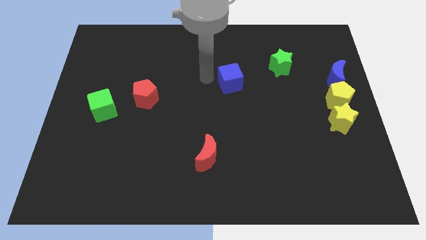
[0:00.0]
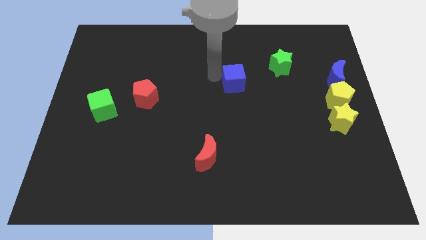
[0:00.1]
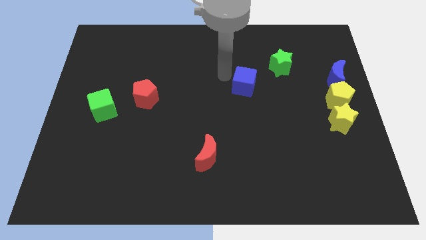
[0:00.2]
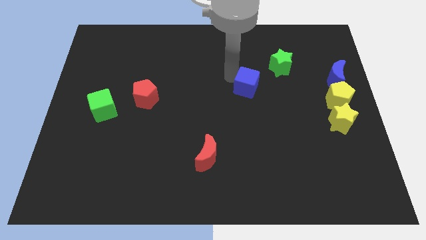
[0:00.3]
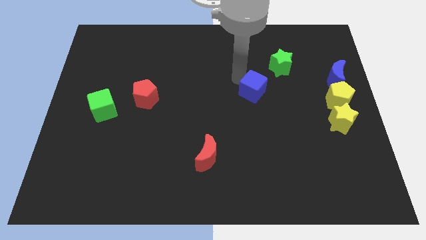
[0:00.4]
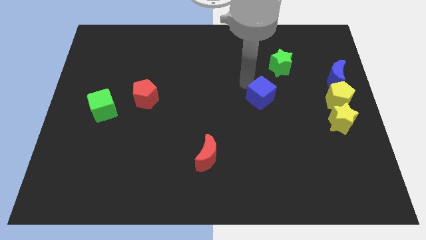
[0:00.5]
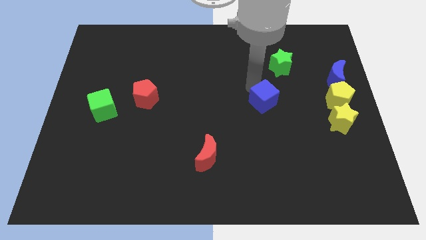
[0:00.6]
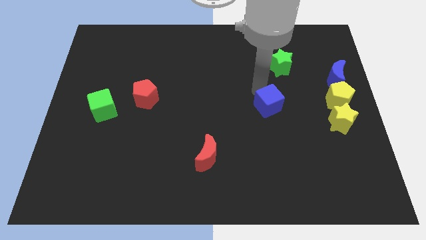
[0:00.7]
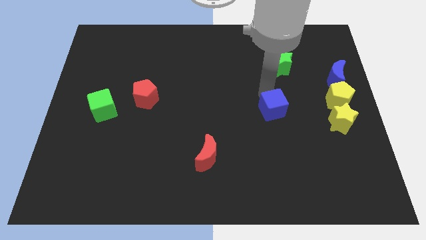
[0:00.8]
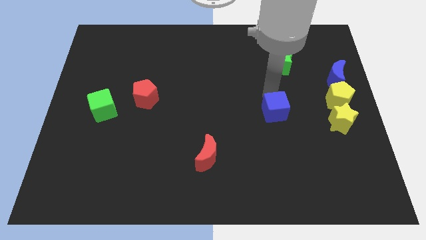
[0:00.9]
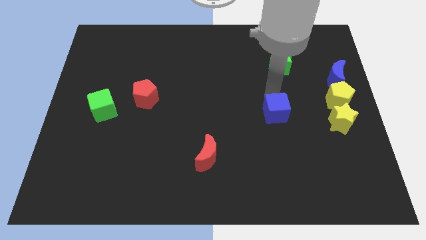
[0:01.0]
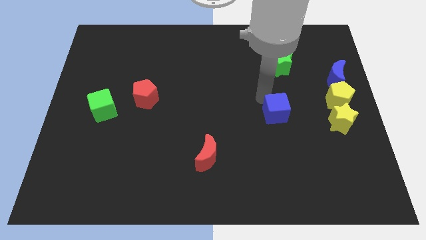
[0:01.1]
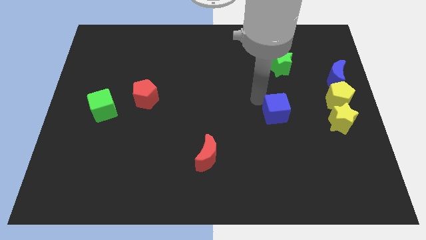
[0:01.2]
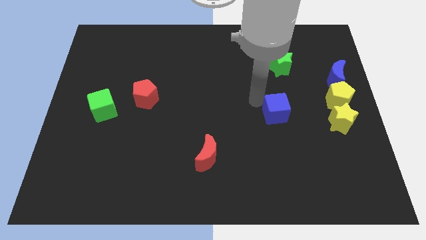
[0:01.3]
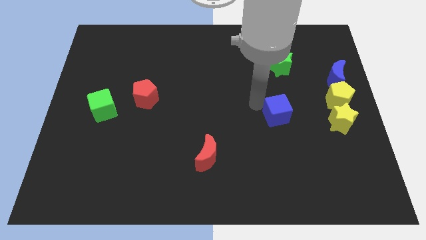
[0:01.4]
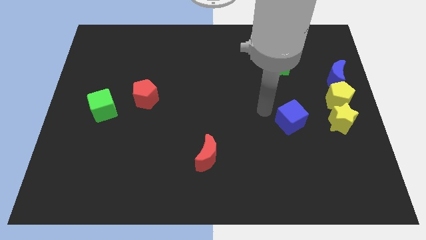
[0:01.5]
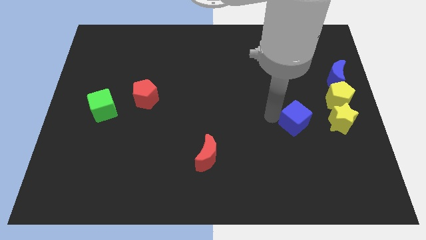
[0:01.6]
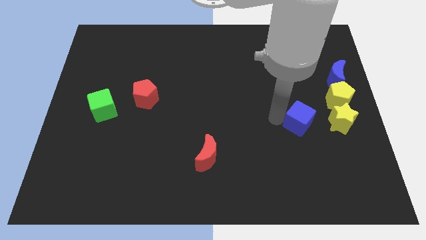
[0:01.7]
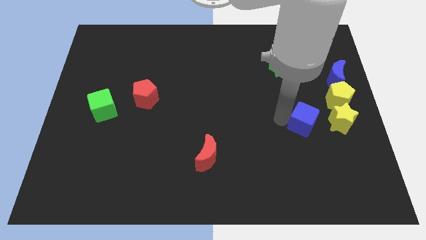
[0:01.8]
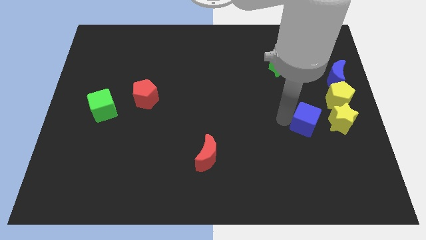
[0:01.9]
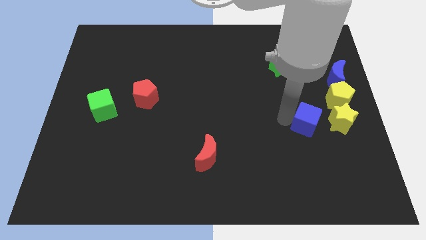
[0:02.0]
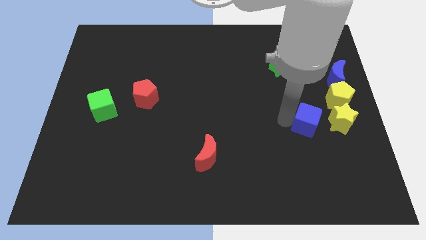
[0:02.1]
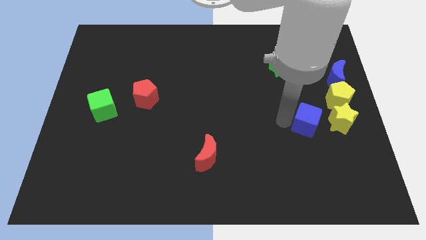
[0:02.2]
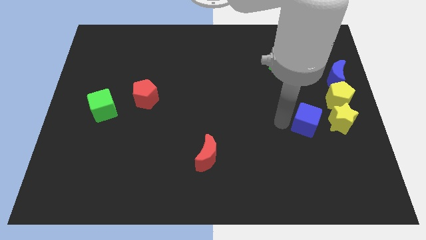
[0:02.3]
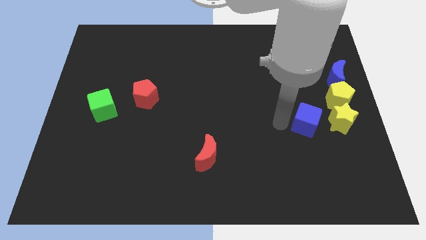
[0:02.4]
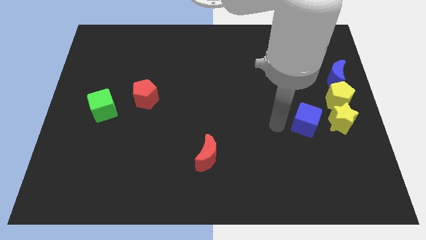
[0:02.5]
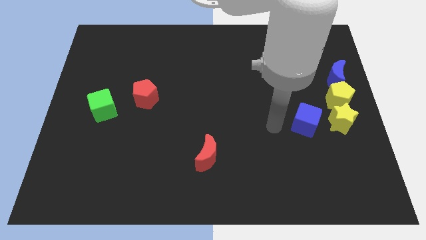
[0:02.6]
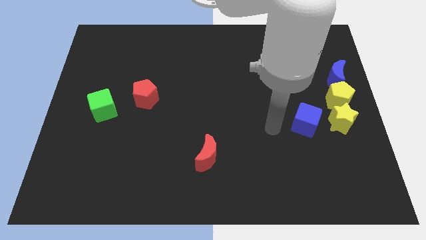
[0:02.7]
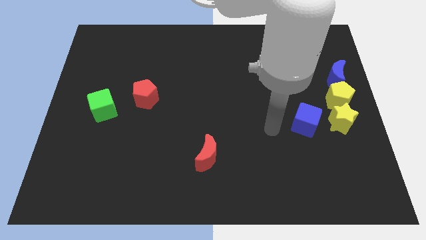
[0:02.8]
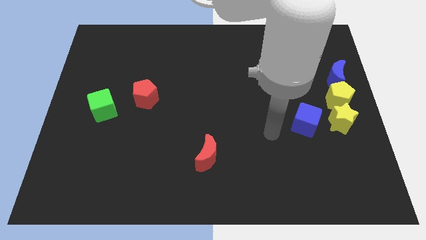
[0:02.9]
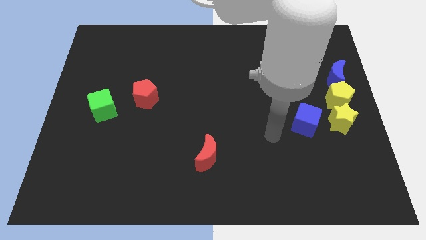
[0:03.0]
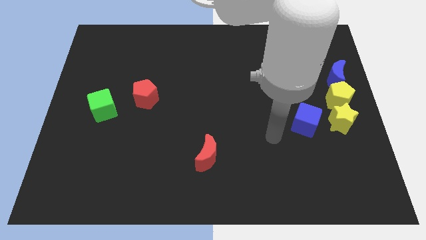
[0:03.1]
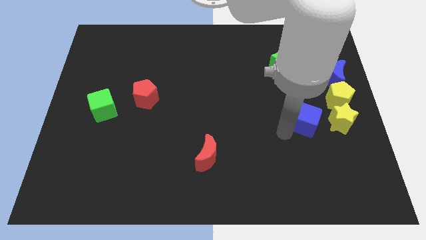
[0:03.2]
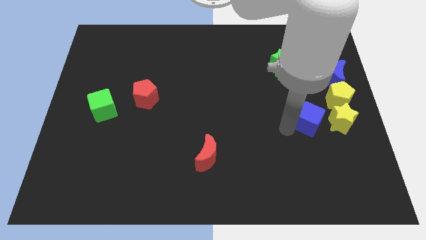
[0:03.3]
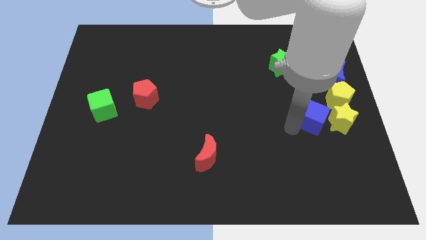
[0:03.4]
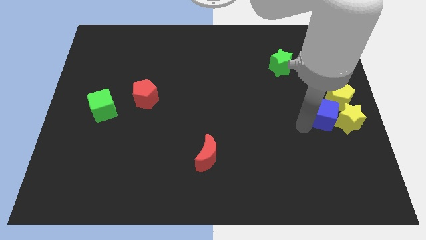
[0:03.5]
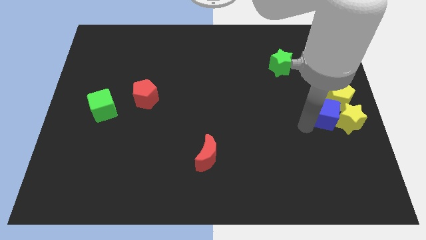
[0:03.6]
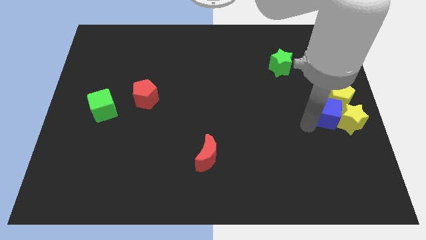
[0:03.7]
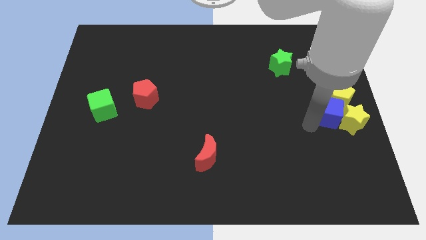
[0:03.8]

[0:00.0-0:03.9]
push the blue cube into the yellow blocks

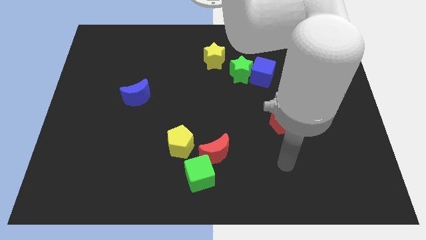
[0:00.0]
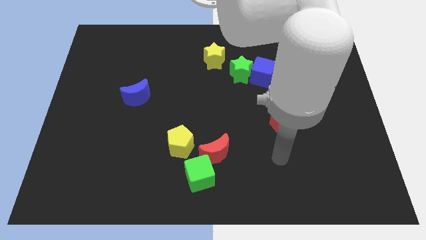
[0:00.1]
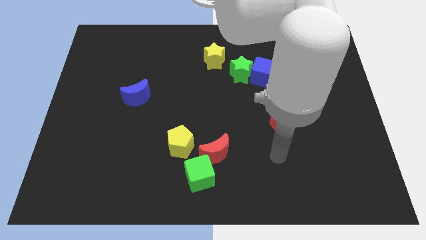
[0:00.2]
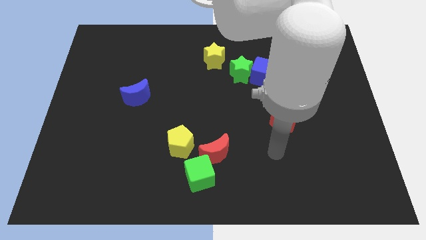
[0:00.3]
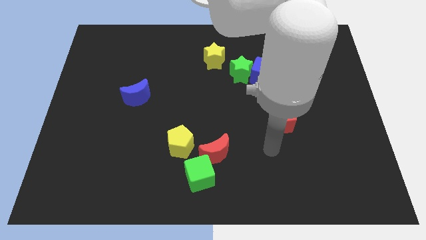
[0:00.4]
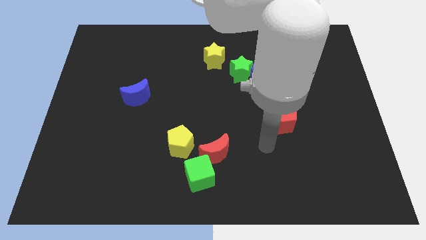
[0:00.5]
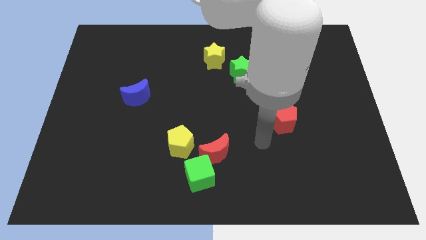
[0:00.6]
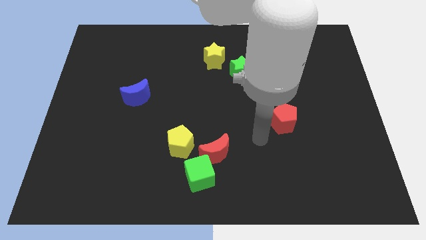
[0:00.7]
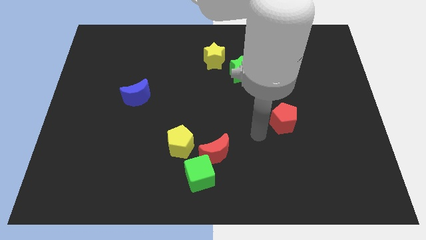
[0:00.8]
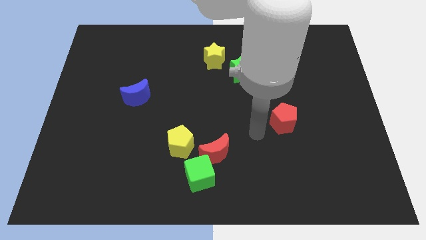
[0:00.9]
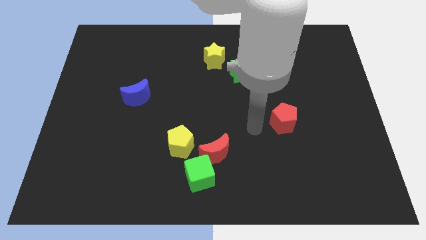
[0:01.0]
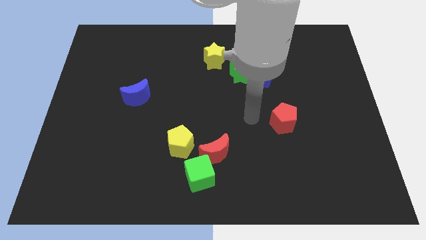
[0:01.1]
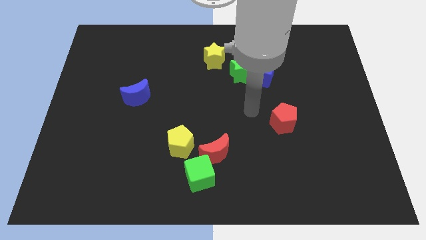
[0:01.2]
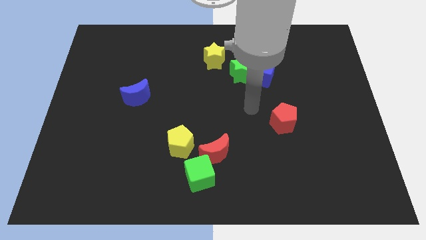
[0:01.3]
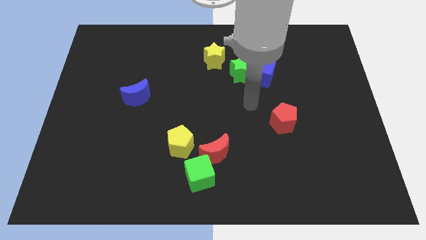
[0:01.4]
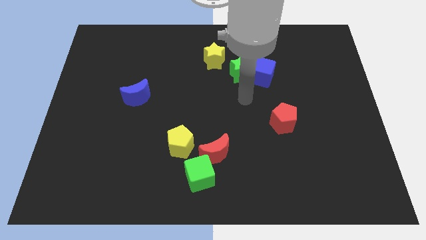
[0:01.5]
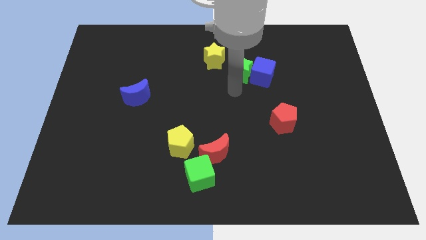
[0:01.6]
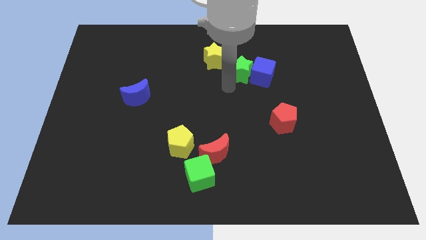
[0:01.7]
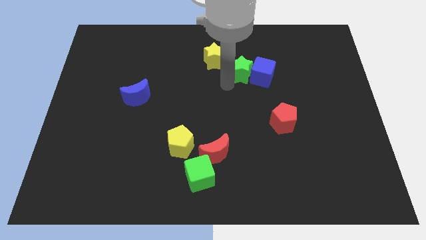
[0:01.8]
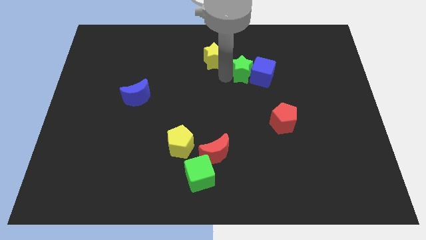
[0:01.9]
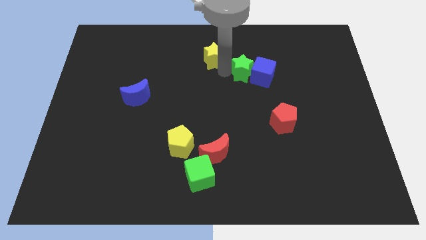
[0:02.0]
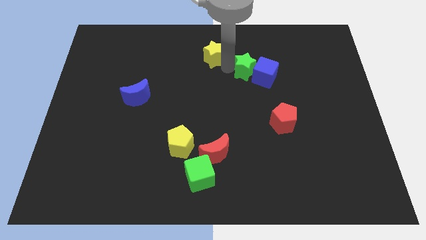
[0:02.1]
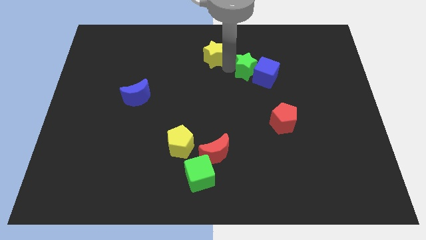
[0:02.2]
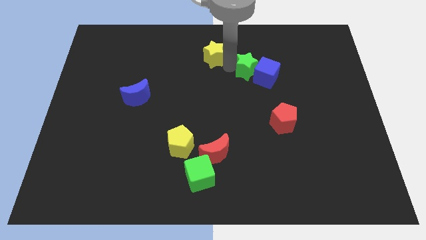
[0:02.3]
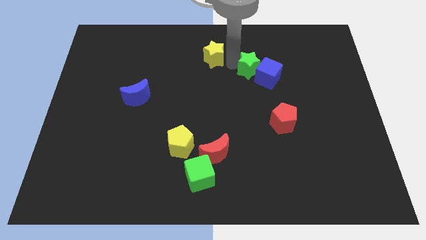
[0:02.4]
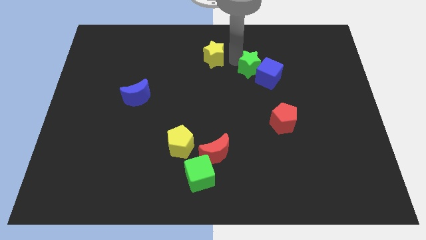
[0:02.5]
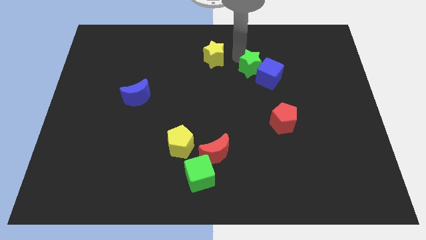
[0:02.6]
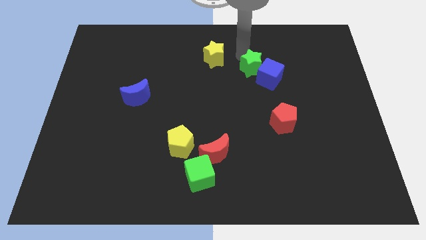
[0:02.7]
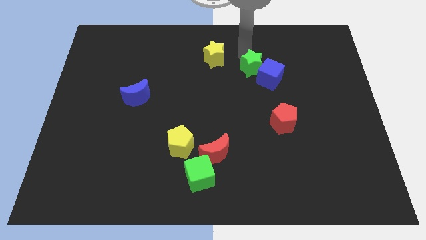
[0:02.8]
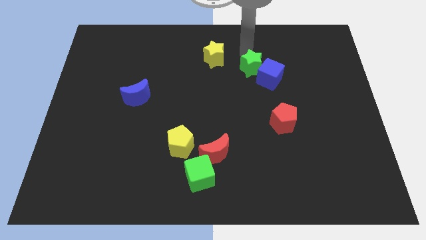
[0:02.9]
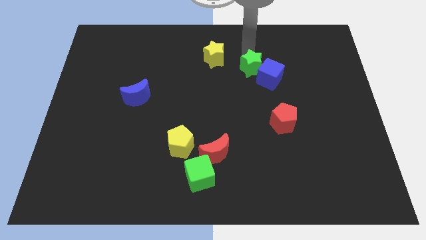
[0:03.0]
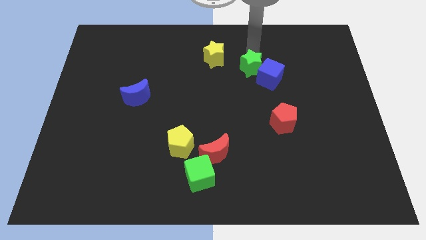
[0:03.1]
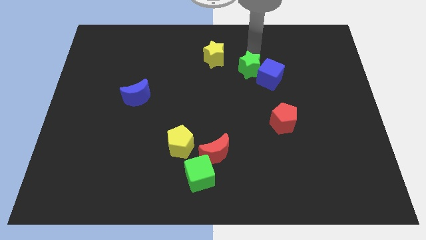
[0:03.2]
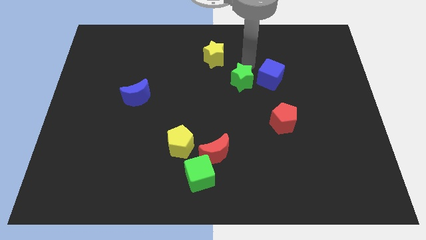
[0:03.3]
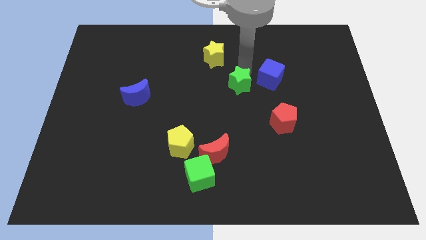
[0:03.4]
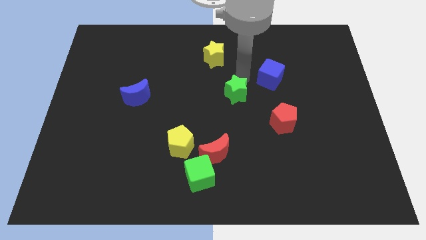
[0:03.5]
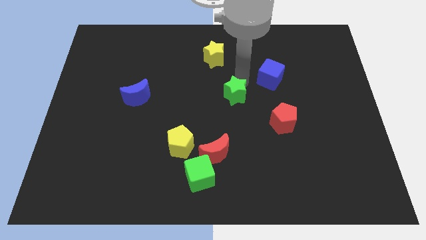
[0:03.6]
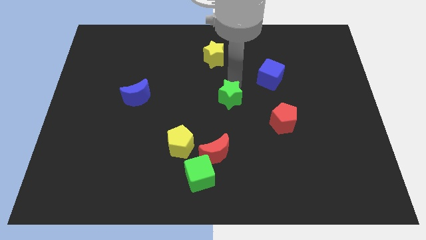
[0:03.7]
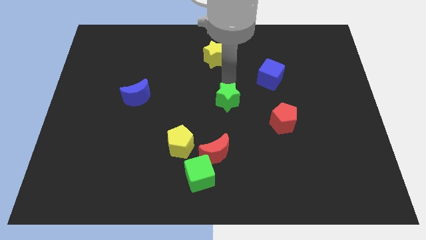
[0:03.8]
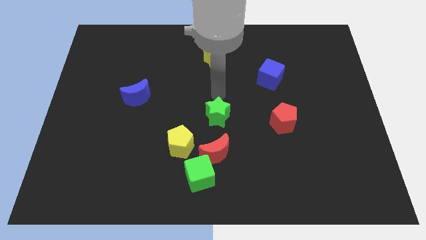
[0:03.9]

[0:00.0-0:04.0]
push the green star to the center of the board

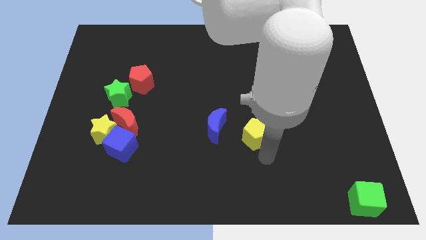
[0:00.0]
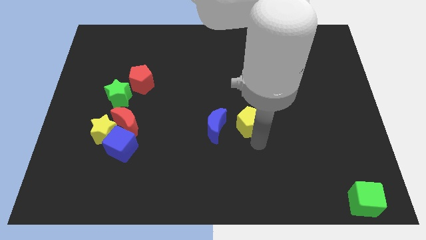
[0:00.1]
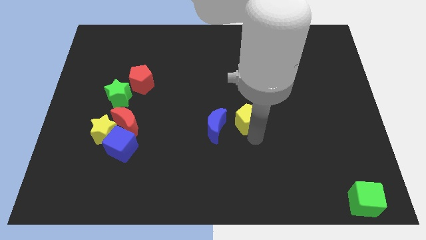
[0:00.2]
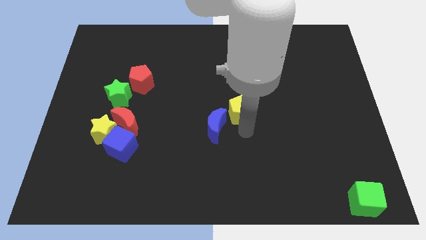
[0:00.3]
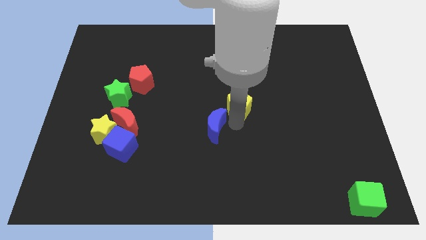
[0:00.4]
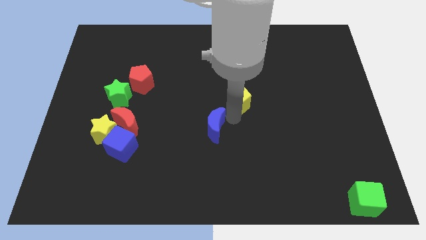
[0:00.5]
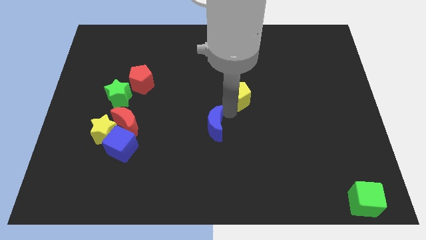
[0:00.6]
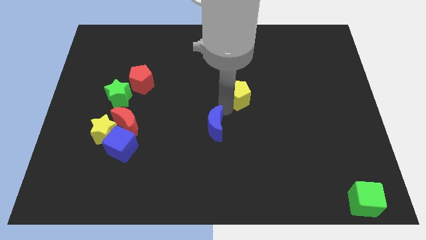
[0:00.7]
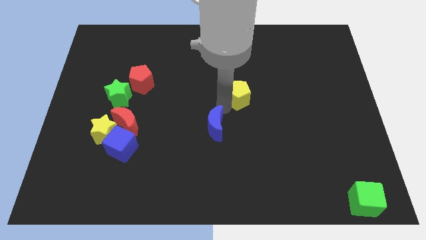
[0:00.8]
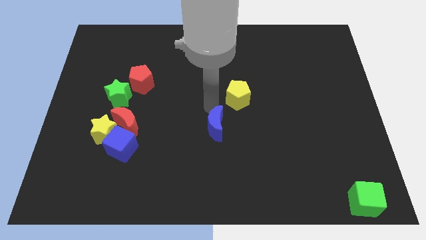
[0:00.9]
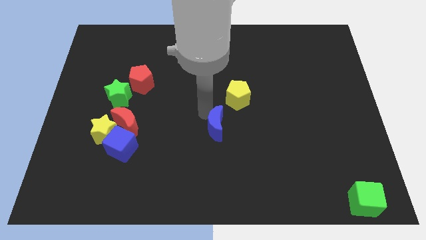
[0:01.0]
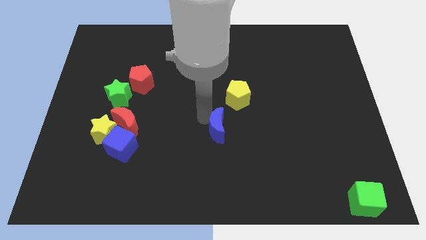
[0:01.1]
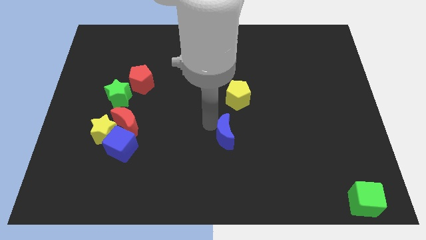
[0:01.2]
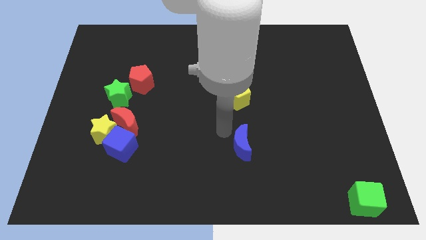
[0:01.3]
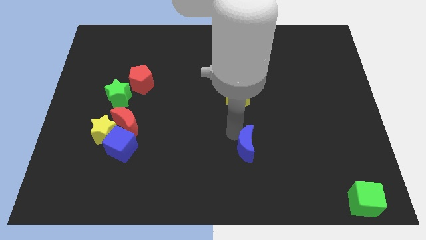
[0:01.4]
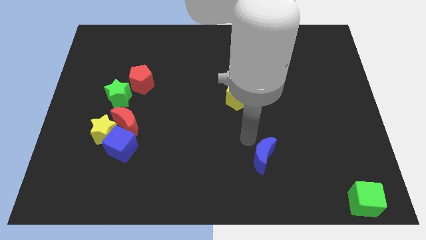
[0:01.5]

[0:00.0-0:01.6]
push the yellow pentagon to the center of the board
